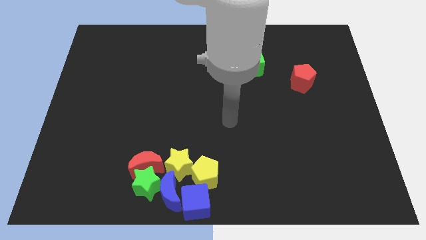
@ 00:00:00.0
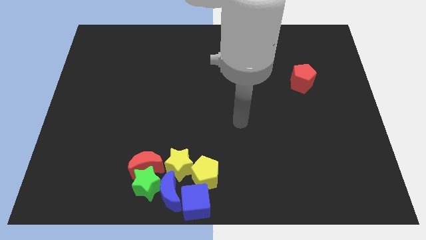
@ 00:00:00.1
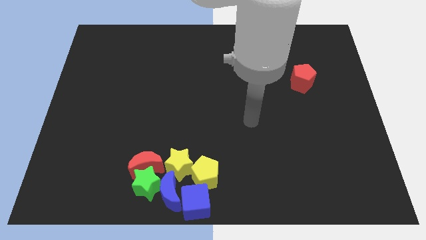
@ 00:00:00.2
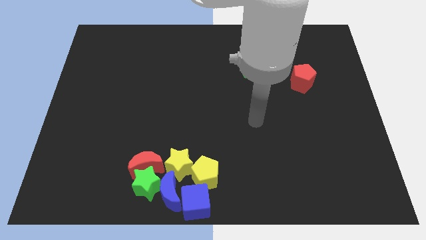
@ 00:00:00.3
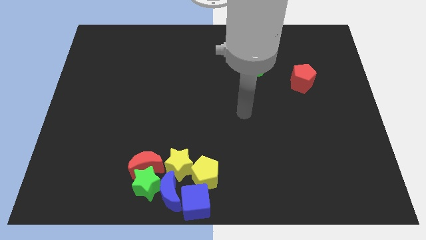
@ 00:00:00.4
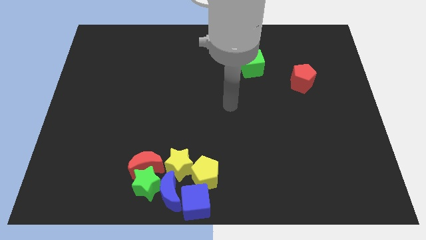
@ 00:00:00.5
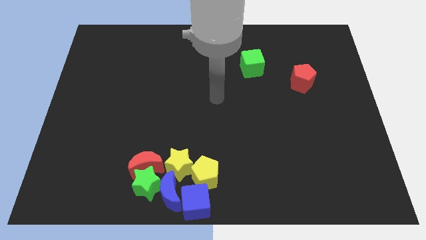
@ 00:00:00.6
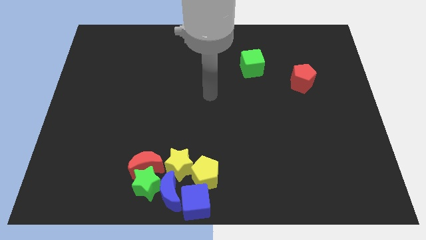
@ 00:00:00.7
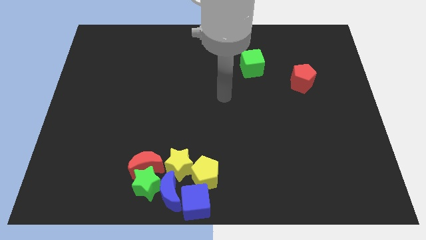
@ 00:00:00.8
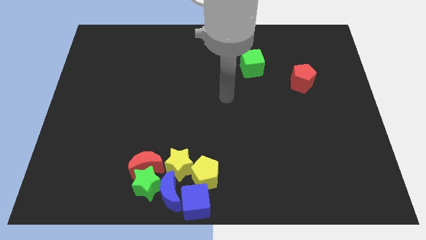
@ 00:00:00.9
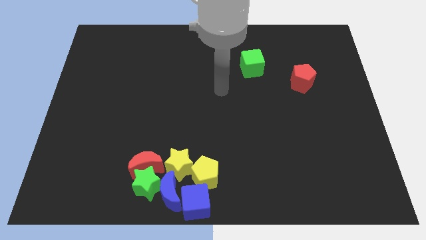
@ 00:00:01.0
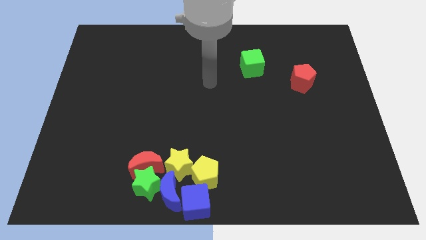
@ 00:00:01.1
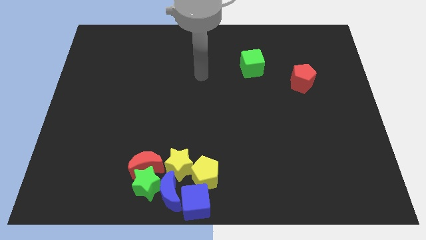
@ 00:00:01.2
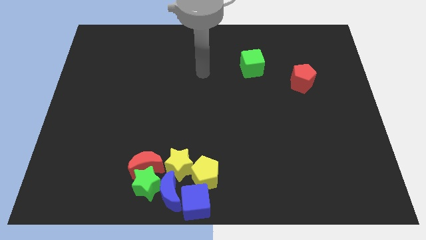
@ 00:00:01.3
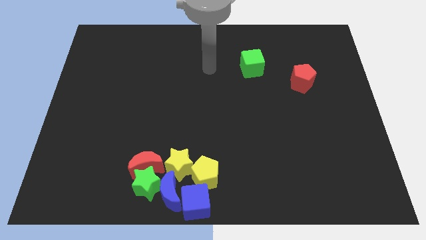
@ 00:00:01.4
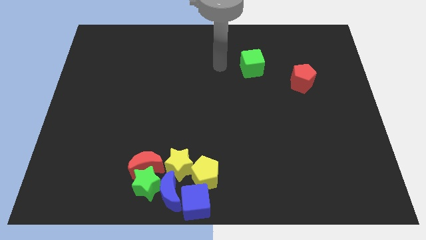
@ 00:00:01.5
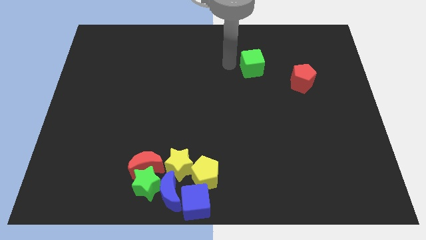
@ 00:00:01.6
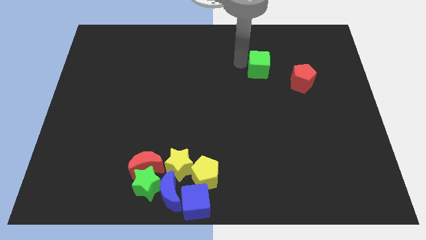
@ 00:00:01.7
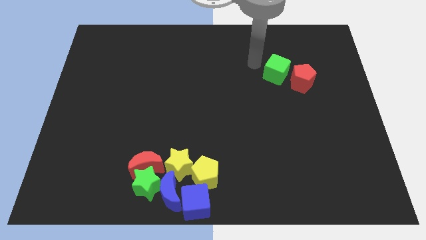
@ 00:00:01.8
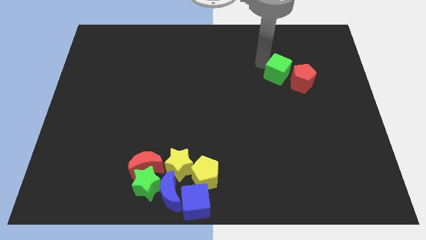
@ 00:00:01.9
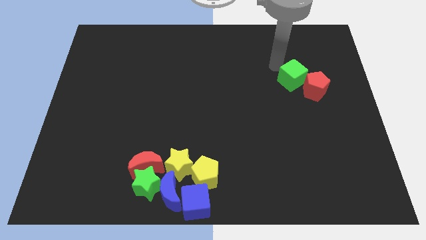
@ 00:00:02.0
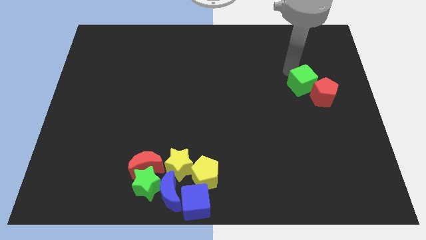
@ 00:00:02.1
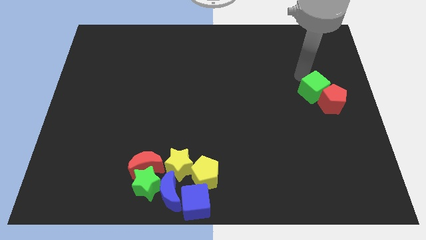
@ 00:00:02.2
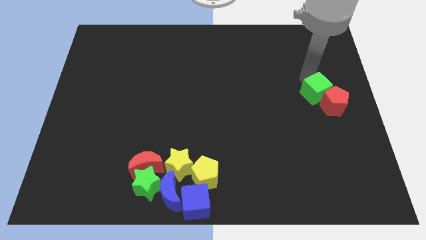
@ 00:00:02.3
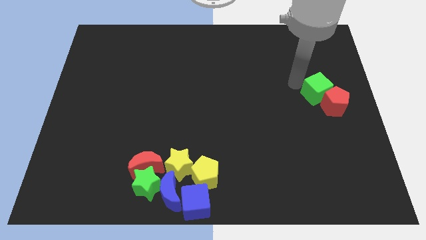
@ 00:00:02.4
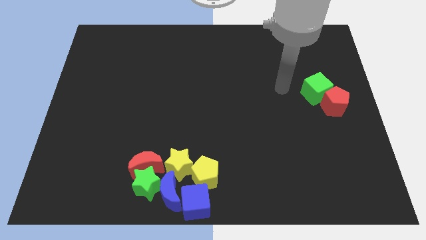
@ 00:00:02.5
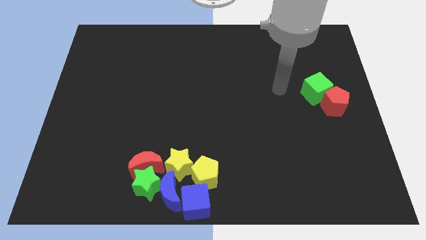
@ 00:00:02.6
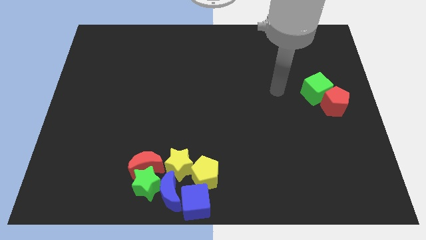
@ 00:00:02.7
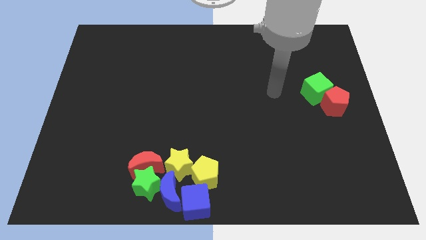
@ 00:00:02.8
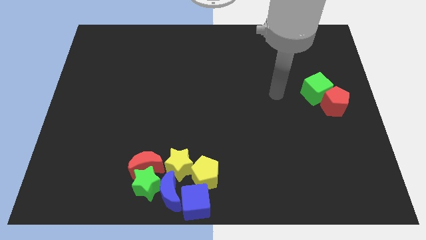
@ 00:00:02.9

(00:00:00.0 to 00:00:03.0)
push the green cube into the red pentagon

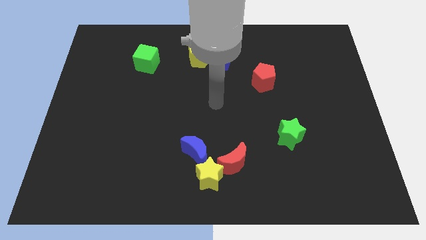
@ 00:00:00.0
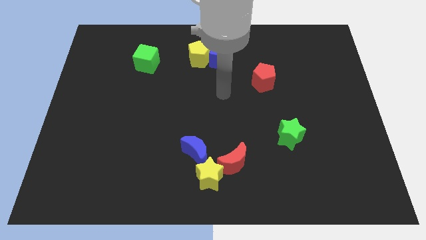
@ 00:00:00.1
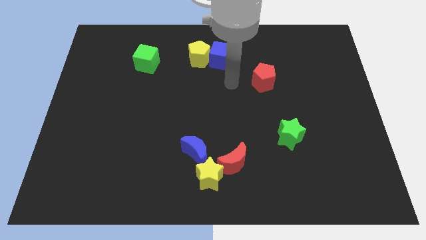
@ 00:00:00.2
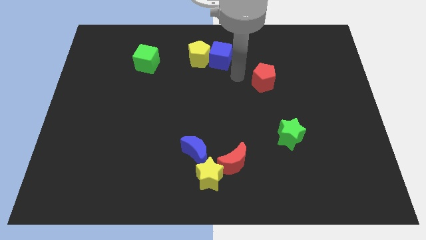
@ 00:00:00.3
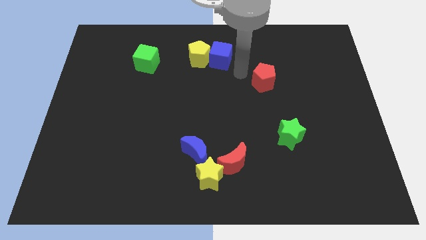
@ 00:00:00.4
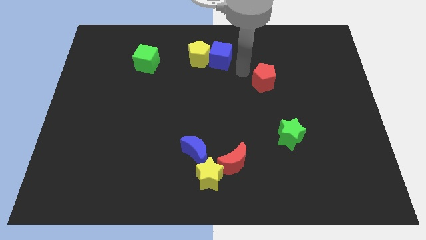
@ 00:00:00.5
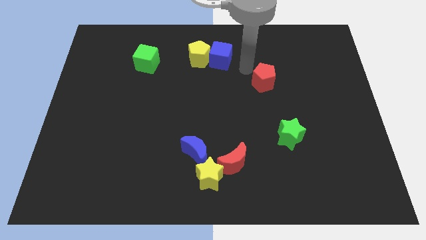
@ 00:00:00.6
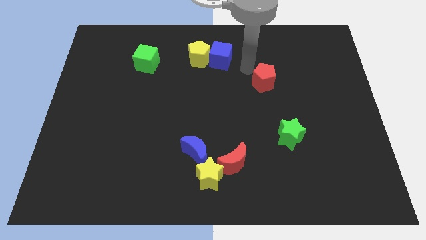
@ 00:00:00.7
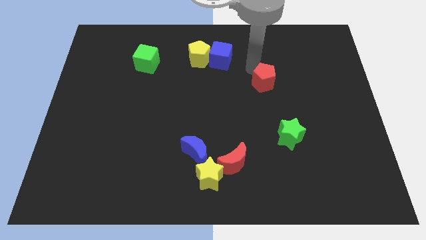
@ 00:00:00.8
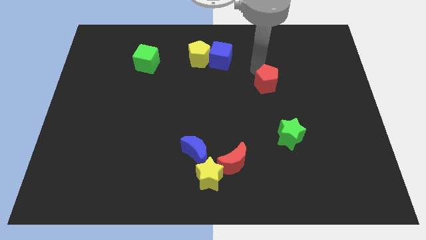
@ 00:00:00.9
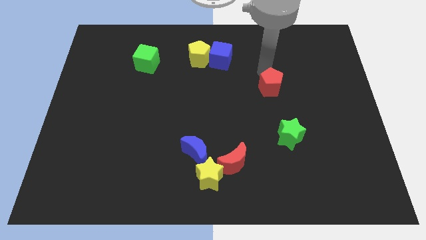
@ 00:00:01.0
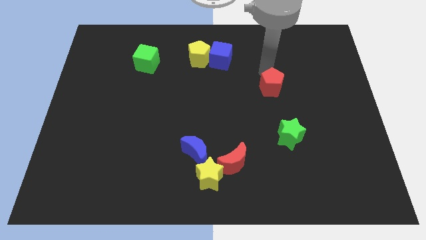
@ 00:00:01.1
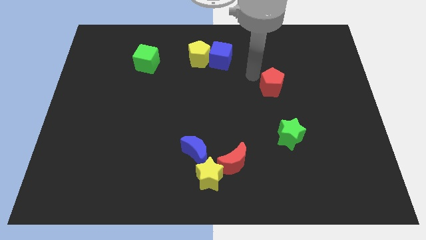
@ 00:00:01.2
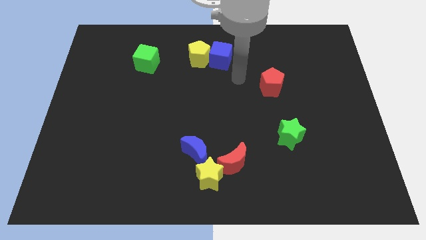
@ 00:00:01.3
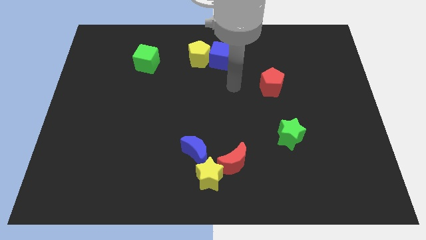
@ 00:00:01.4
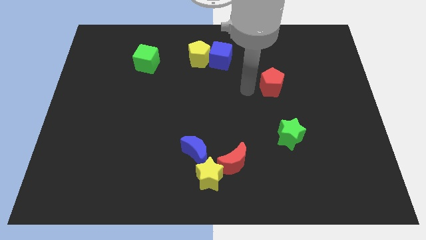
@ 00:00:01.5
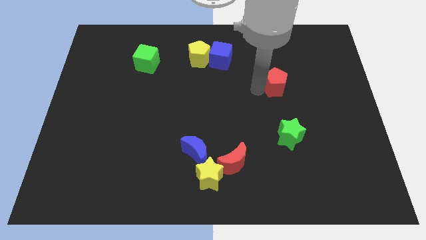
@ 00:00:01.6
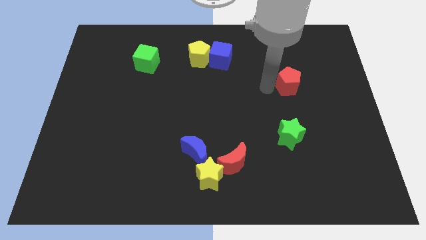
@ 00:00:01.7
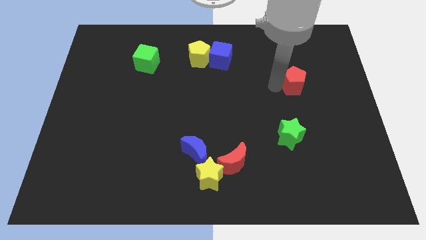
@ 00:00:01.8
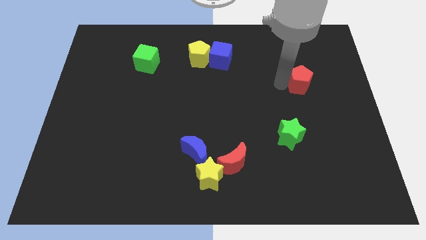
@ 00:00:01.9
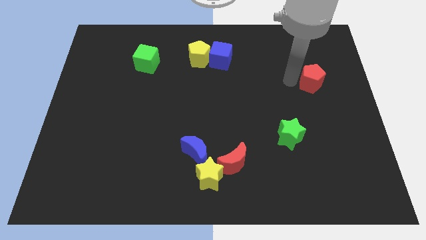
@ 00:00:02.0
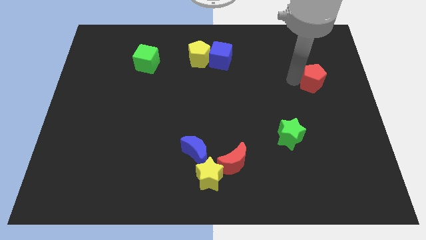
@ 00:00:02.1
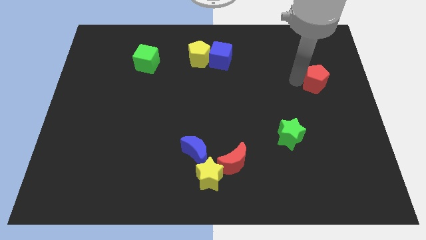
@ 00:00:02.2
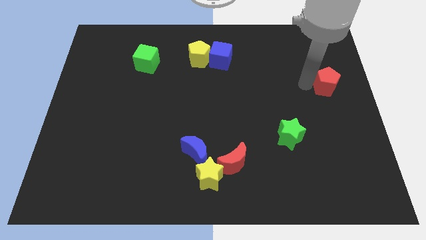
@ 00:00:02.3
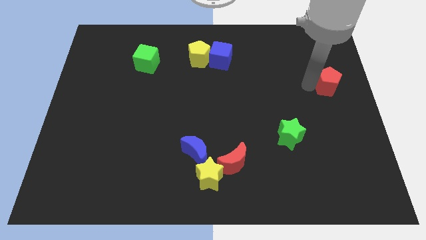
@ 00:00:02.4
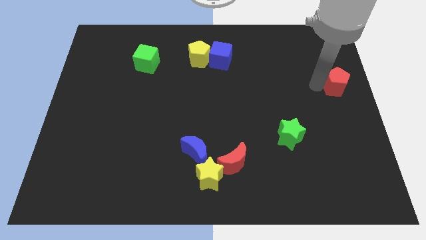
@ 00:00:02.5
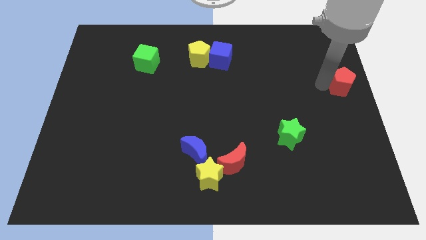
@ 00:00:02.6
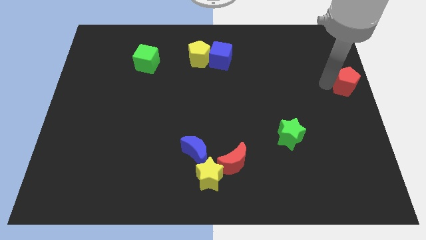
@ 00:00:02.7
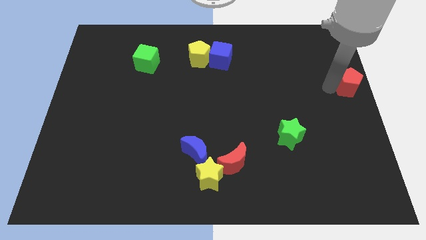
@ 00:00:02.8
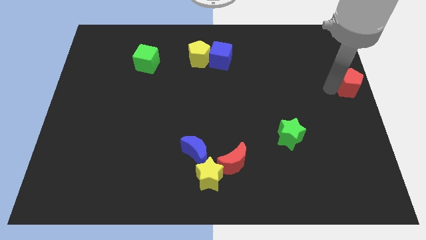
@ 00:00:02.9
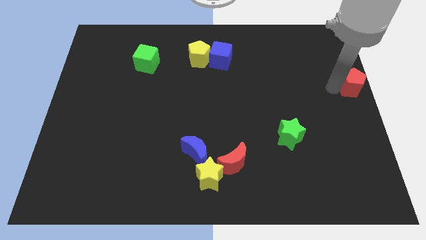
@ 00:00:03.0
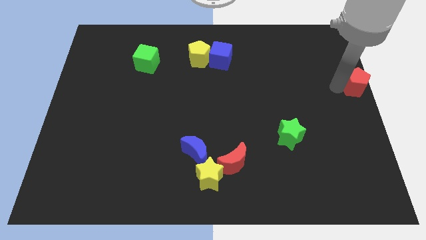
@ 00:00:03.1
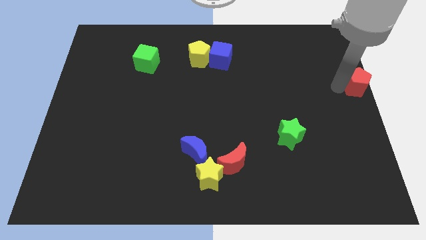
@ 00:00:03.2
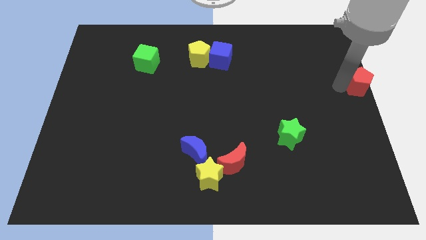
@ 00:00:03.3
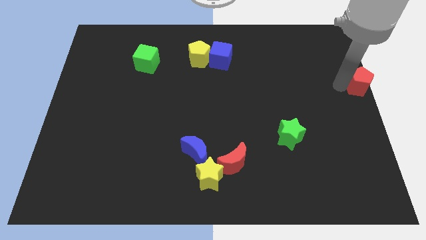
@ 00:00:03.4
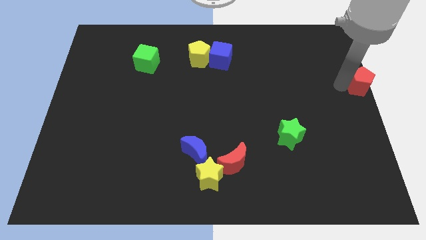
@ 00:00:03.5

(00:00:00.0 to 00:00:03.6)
push the red pentagon to the right side of the table

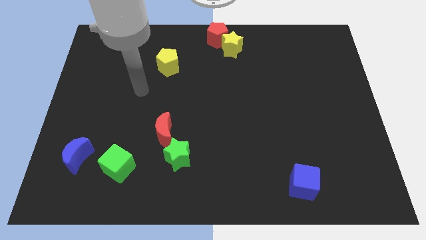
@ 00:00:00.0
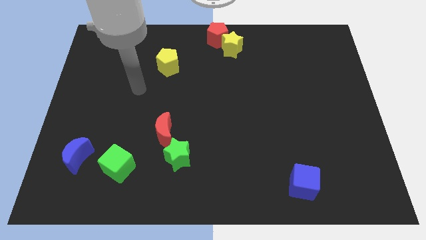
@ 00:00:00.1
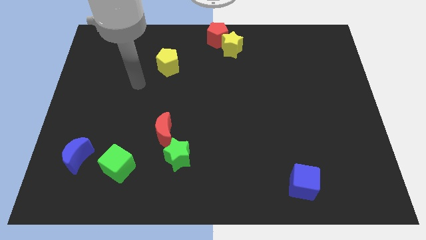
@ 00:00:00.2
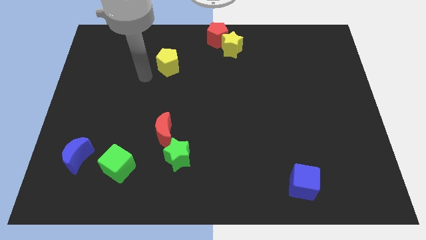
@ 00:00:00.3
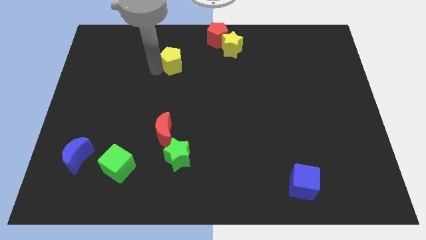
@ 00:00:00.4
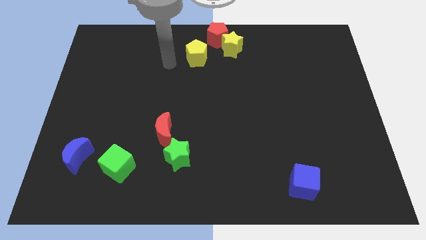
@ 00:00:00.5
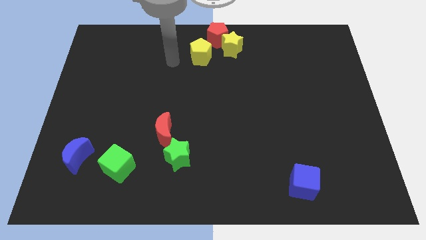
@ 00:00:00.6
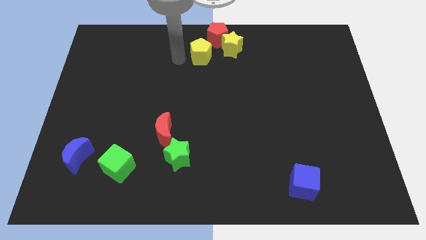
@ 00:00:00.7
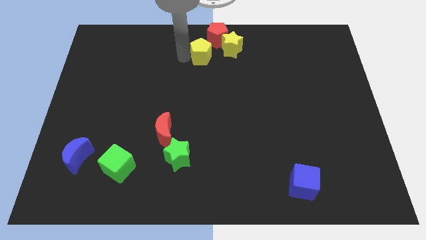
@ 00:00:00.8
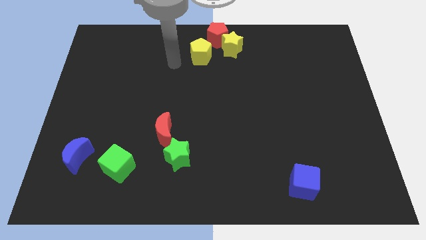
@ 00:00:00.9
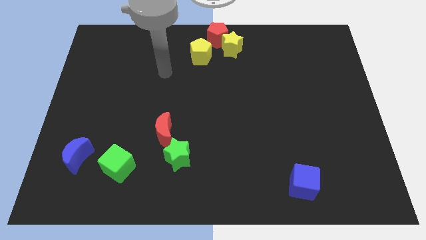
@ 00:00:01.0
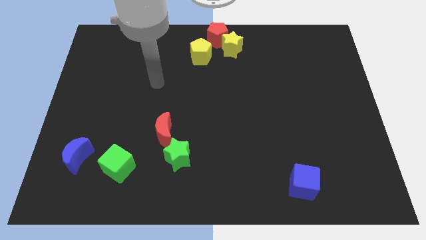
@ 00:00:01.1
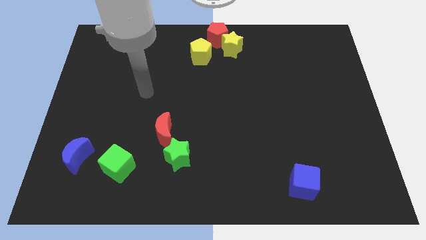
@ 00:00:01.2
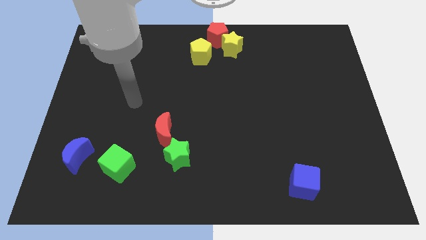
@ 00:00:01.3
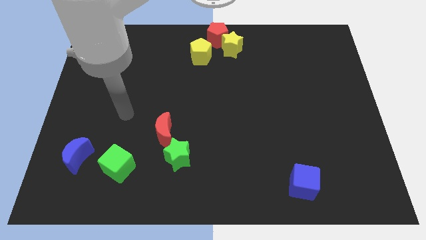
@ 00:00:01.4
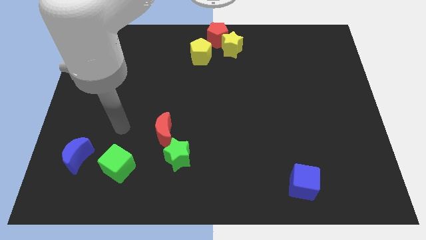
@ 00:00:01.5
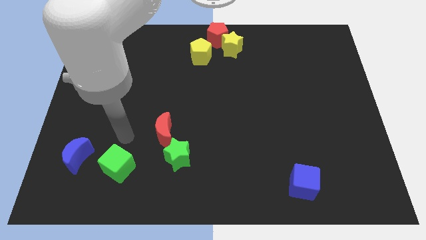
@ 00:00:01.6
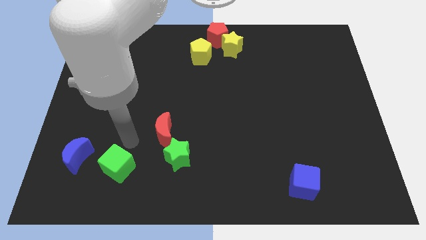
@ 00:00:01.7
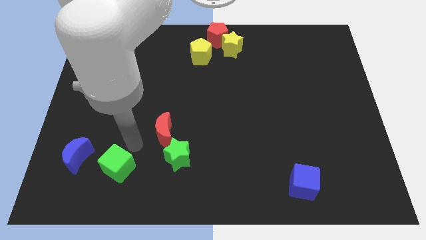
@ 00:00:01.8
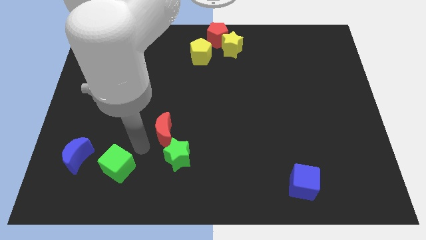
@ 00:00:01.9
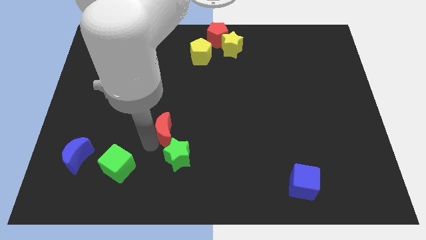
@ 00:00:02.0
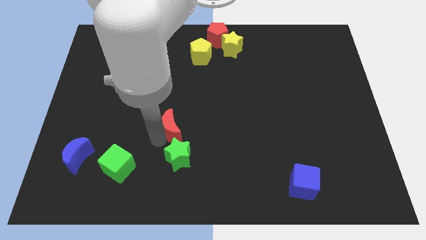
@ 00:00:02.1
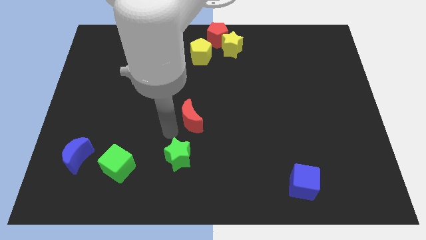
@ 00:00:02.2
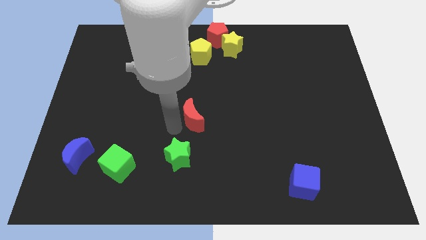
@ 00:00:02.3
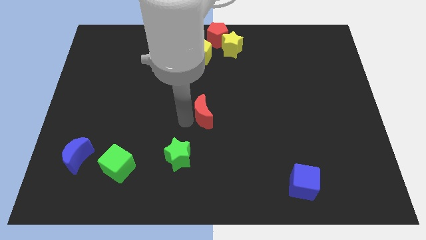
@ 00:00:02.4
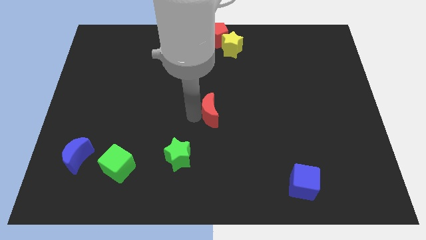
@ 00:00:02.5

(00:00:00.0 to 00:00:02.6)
place yellow pentagon and red moon in a vertical line
